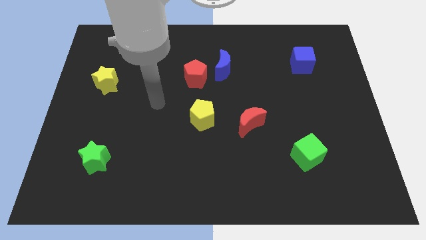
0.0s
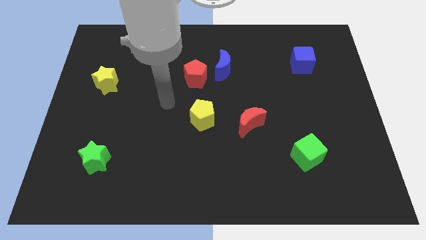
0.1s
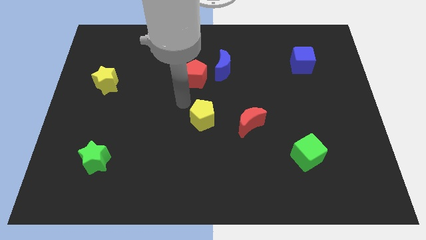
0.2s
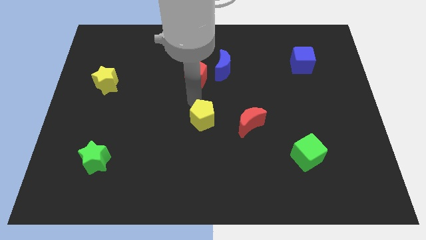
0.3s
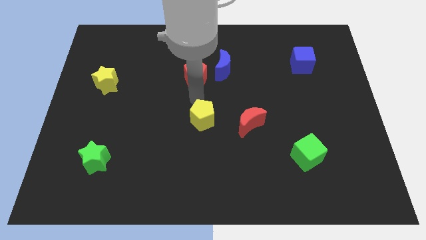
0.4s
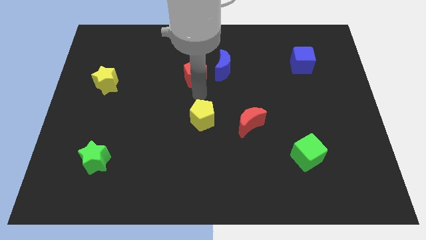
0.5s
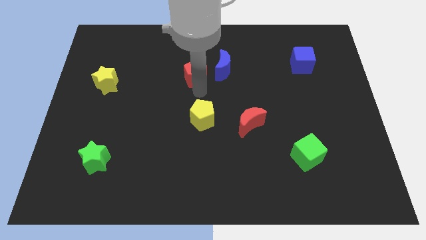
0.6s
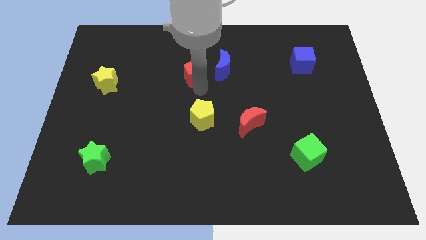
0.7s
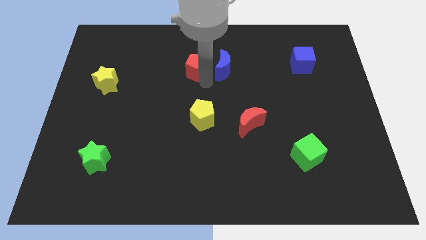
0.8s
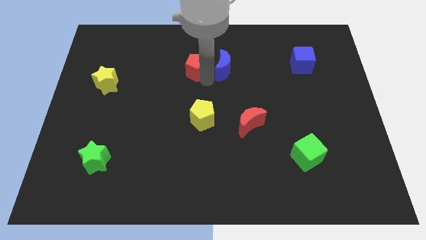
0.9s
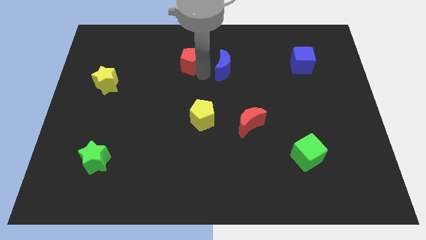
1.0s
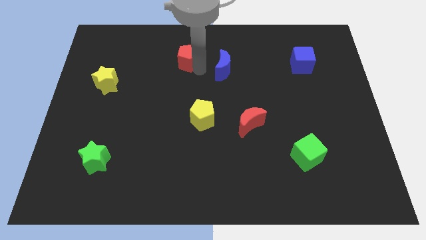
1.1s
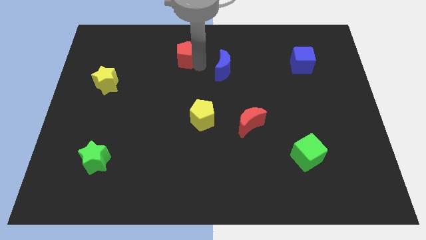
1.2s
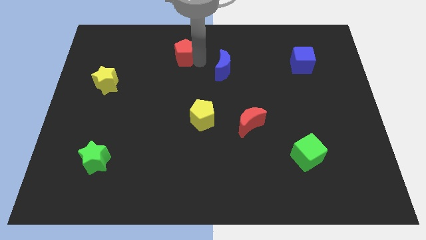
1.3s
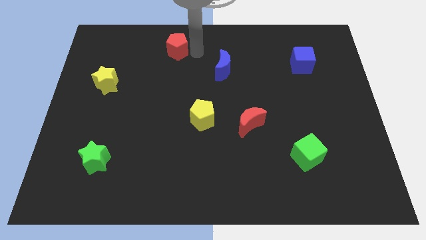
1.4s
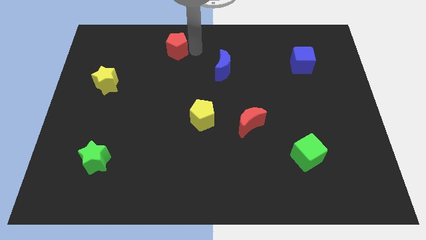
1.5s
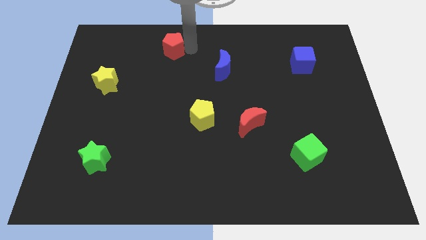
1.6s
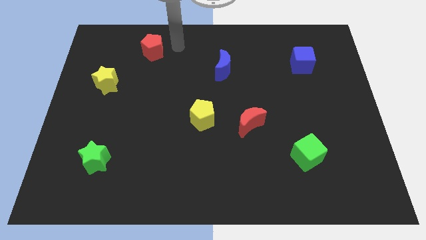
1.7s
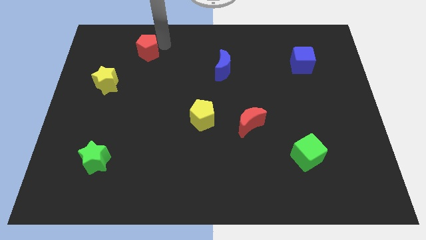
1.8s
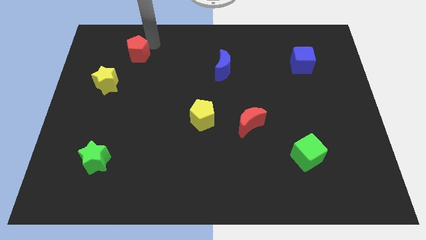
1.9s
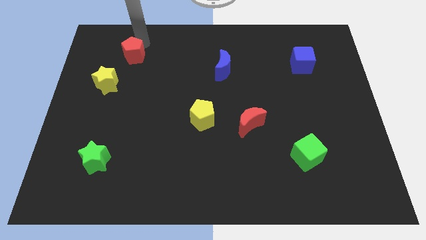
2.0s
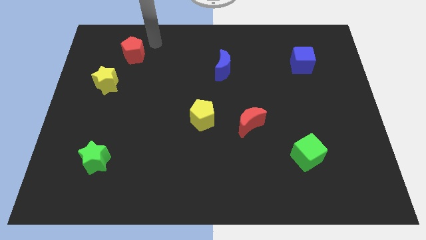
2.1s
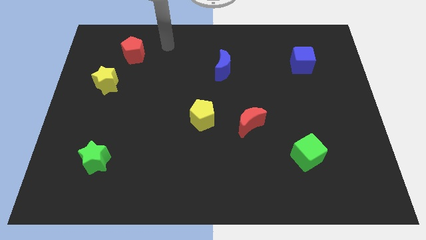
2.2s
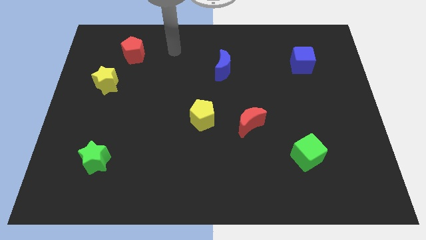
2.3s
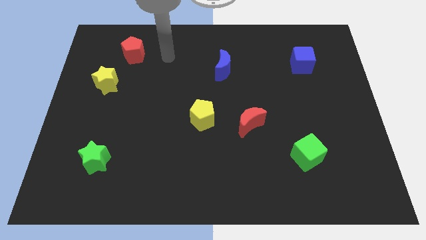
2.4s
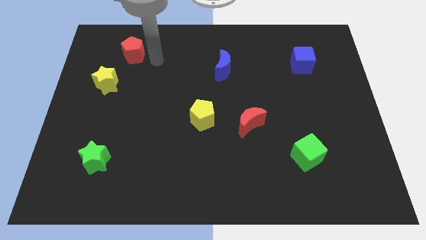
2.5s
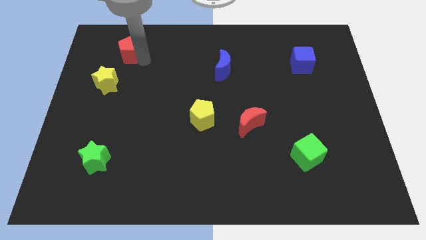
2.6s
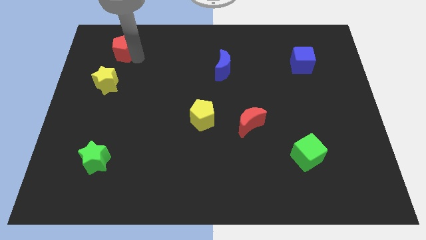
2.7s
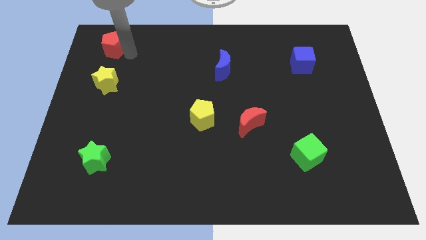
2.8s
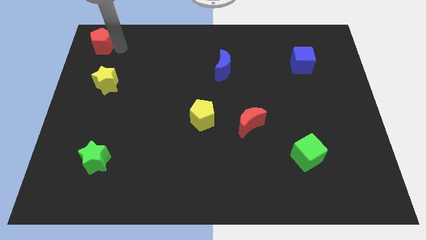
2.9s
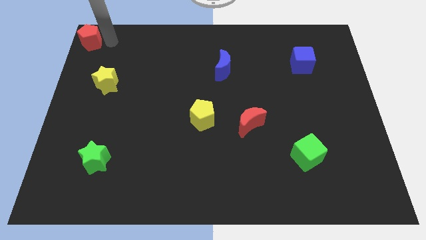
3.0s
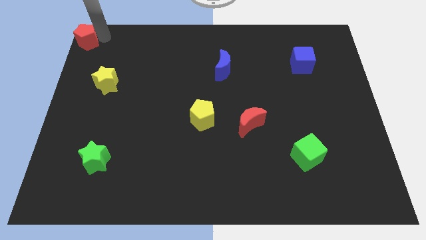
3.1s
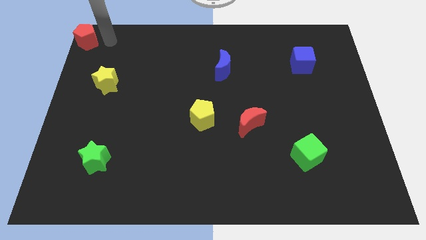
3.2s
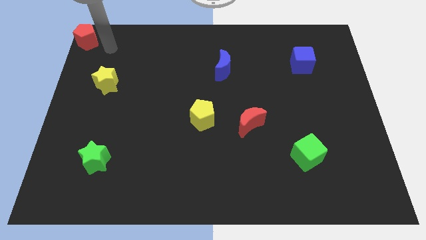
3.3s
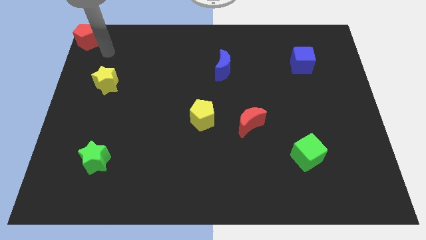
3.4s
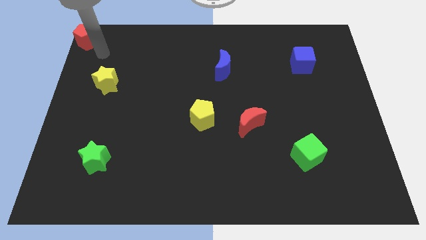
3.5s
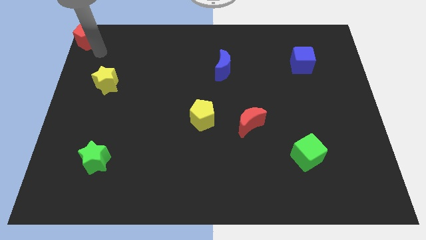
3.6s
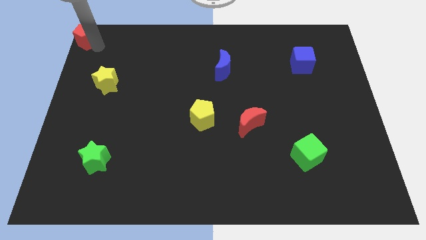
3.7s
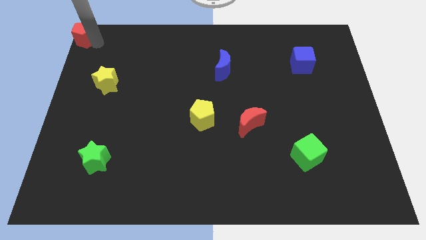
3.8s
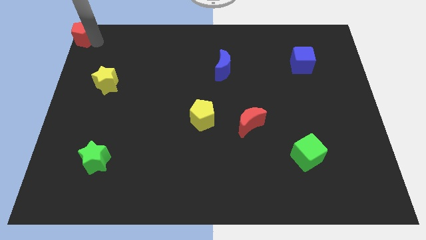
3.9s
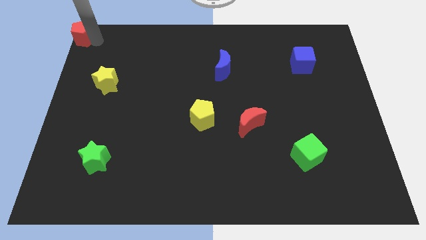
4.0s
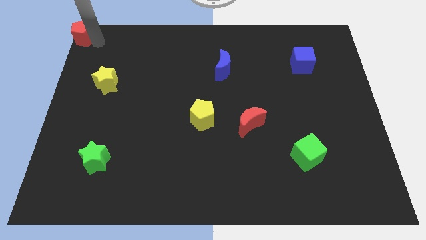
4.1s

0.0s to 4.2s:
push the red pentagon to the left top of the board

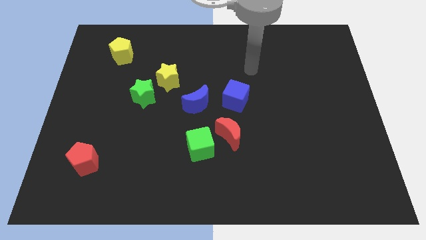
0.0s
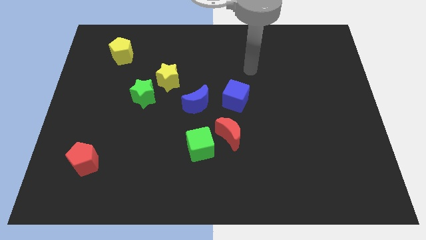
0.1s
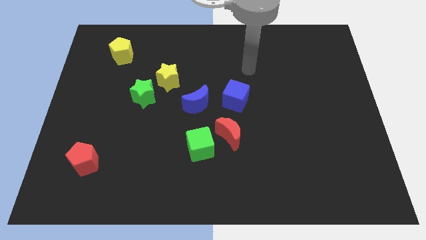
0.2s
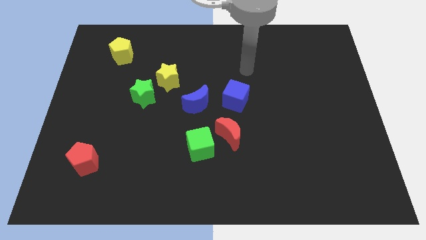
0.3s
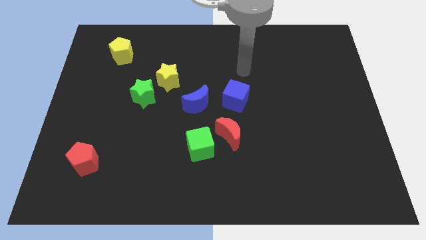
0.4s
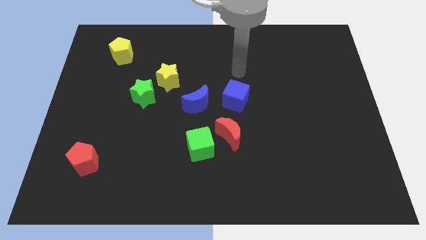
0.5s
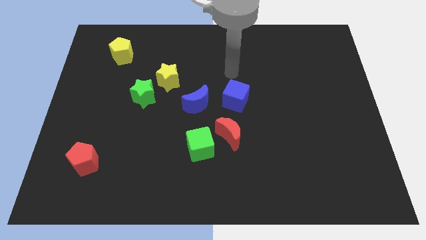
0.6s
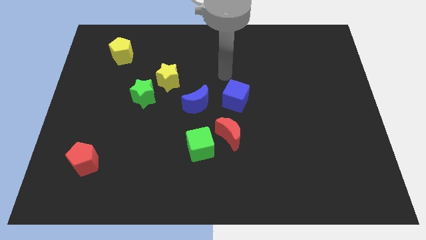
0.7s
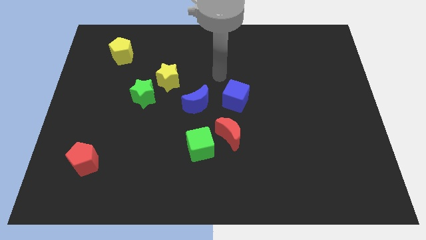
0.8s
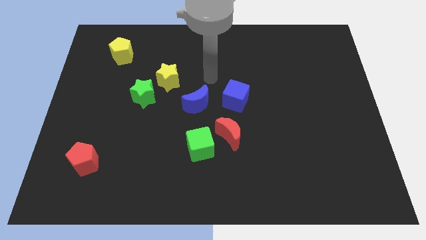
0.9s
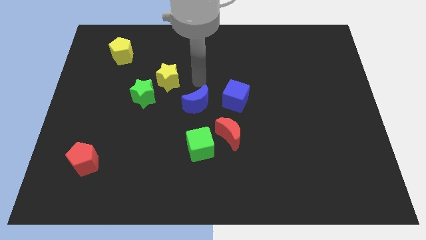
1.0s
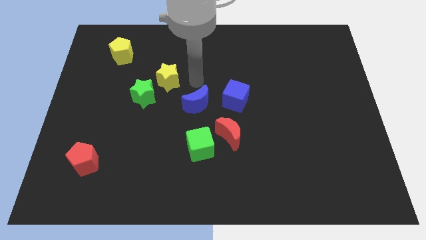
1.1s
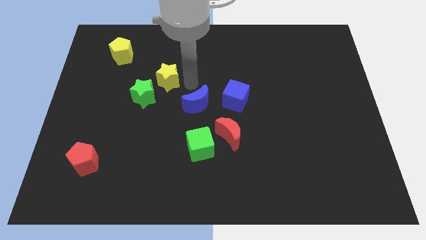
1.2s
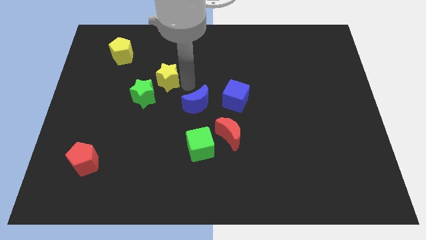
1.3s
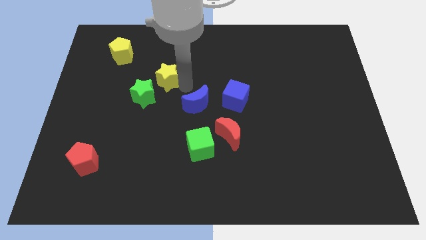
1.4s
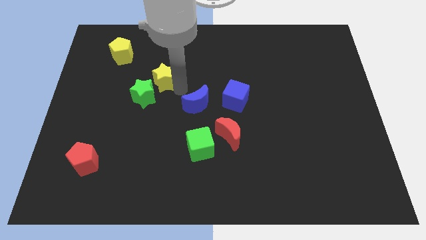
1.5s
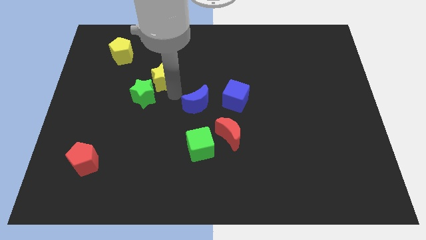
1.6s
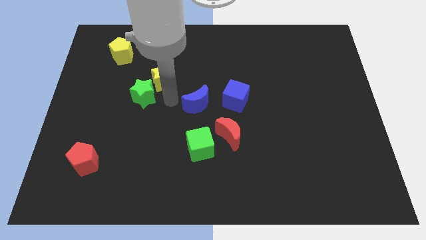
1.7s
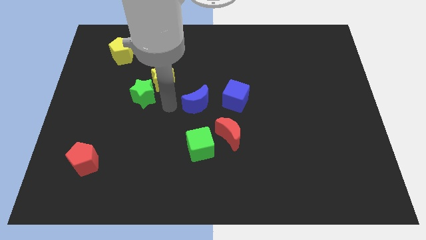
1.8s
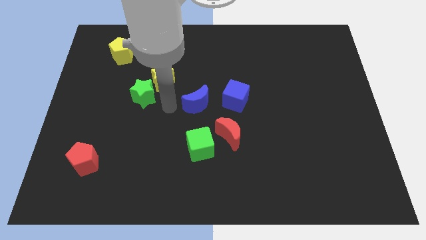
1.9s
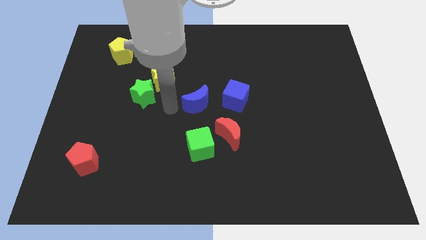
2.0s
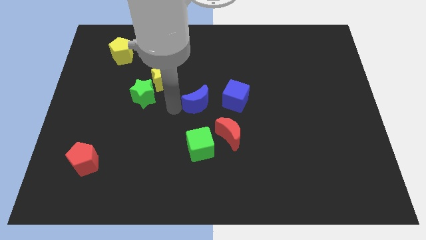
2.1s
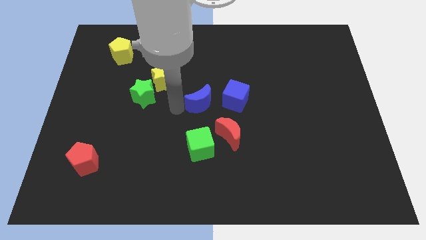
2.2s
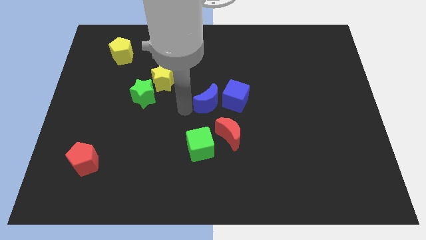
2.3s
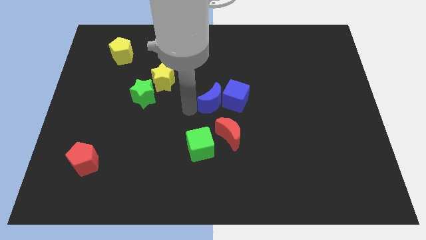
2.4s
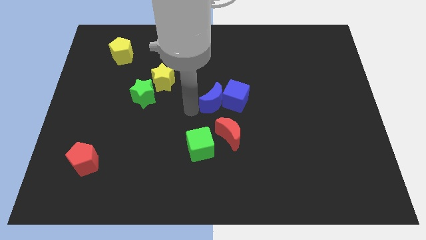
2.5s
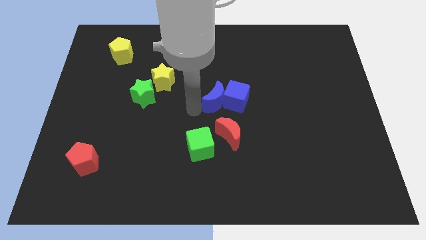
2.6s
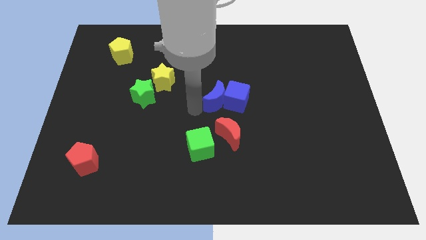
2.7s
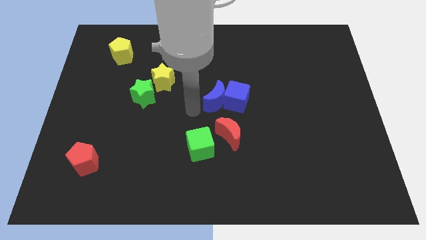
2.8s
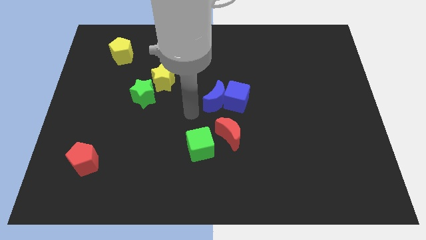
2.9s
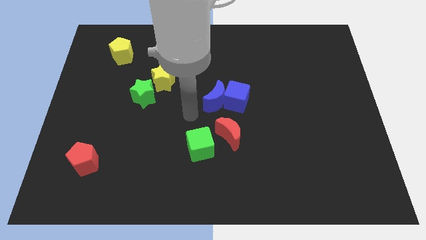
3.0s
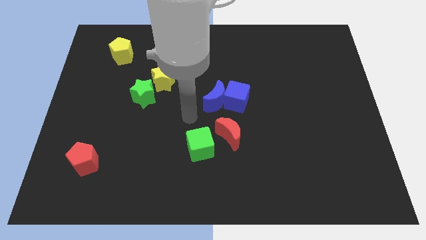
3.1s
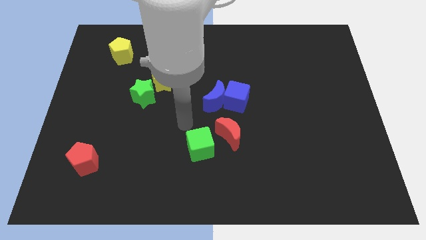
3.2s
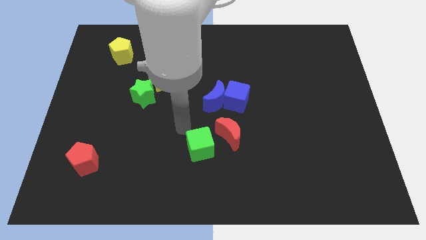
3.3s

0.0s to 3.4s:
push the blue crescent to the right of the blue cube

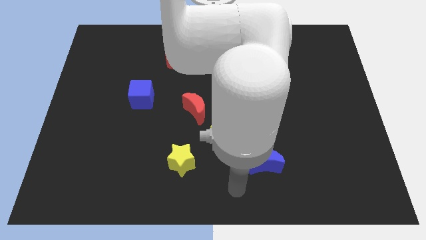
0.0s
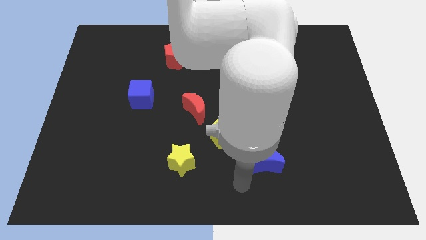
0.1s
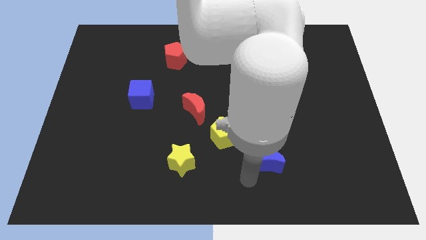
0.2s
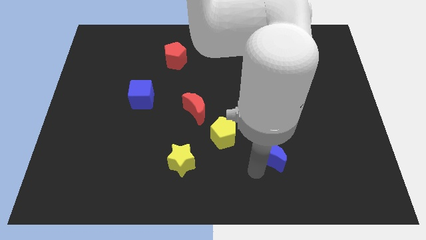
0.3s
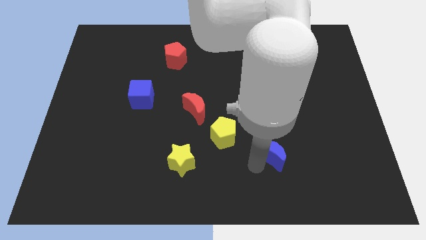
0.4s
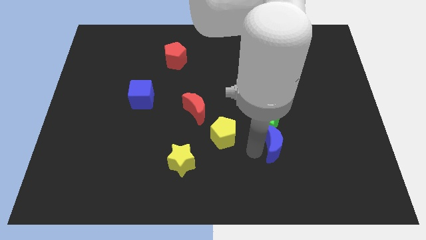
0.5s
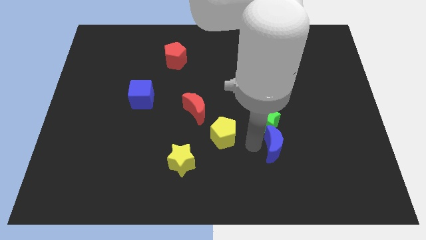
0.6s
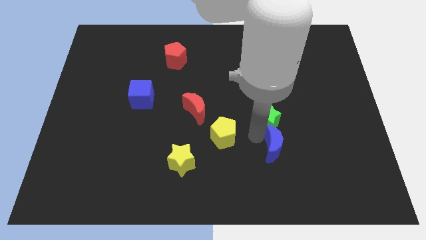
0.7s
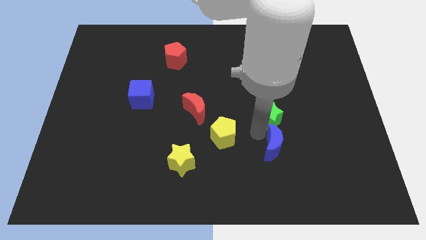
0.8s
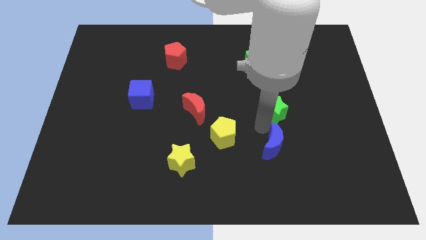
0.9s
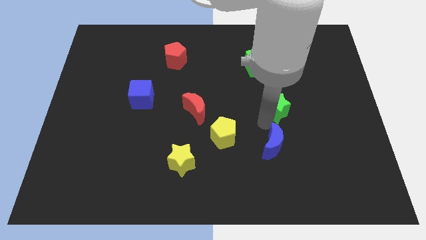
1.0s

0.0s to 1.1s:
place blue moon below green star
